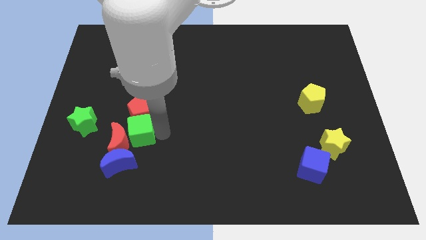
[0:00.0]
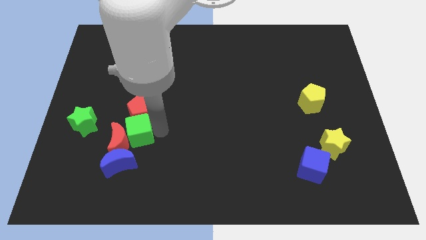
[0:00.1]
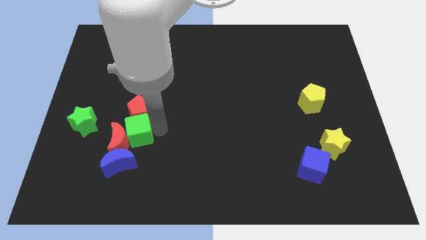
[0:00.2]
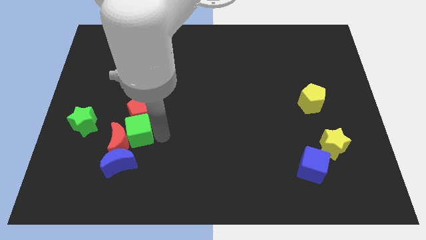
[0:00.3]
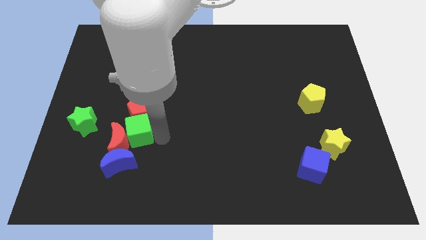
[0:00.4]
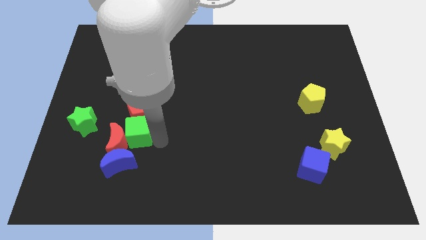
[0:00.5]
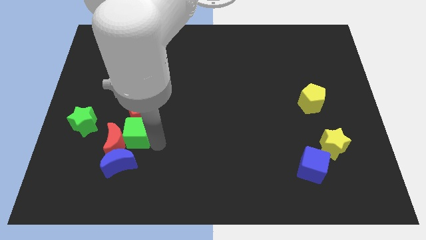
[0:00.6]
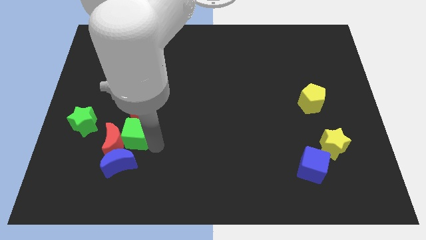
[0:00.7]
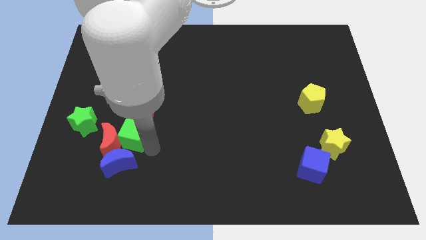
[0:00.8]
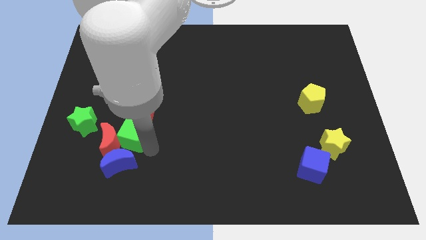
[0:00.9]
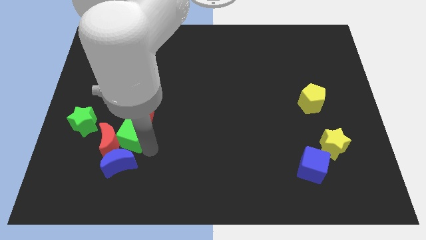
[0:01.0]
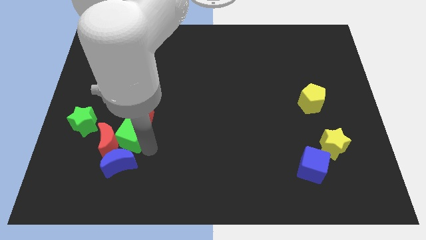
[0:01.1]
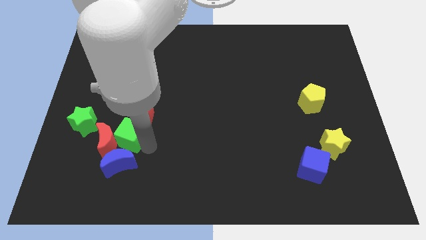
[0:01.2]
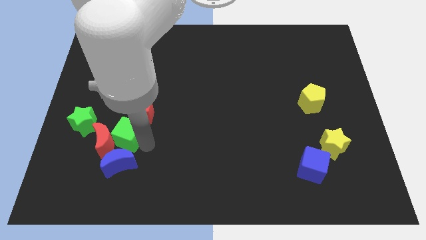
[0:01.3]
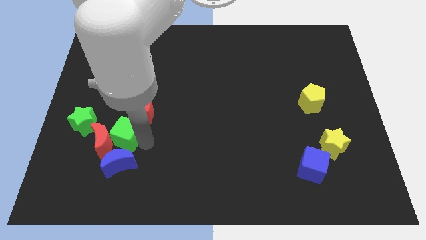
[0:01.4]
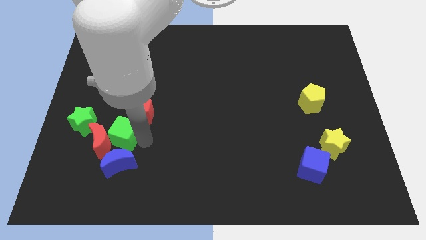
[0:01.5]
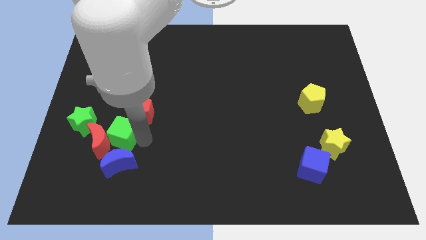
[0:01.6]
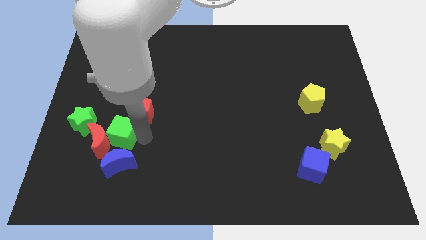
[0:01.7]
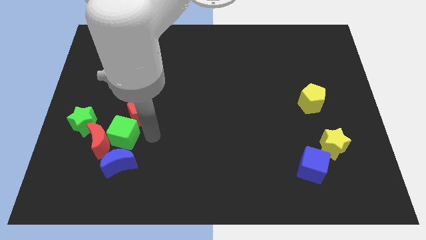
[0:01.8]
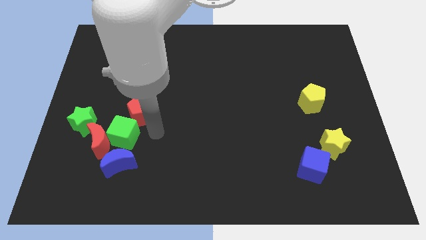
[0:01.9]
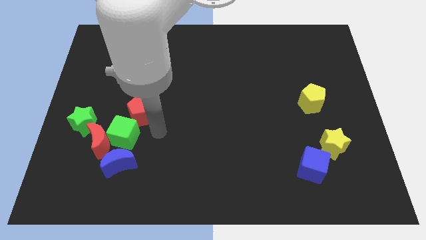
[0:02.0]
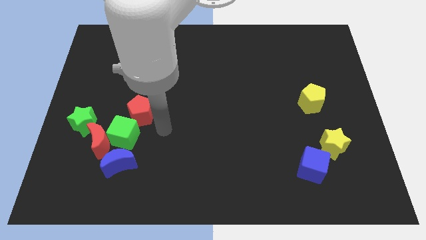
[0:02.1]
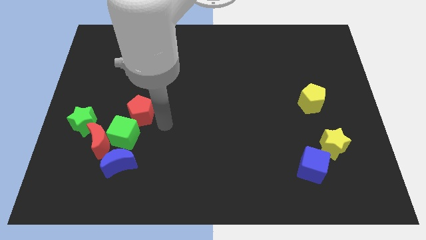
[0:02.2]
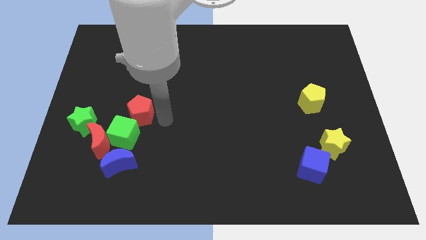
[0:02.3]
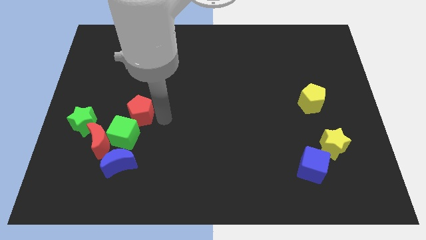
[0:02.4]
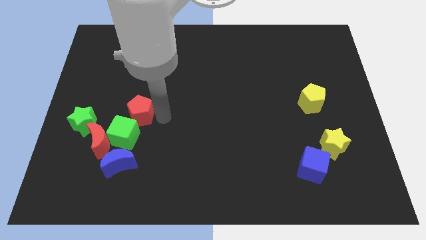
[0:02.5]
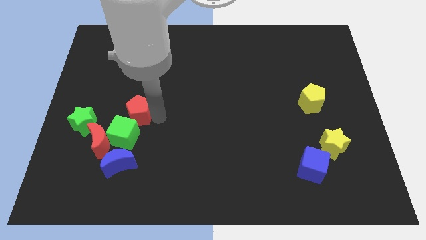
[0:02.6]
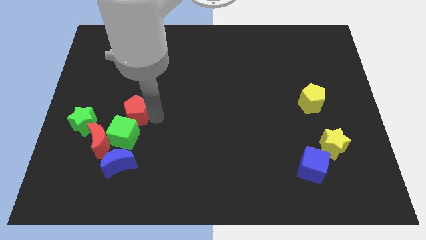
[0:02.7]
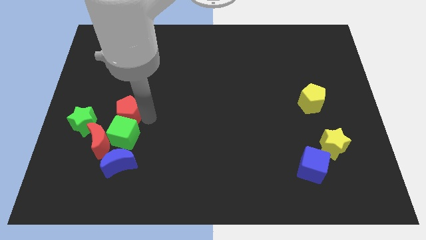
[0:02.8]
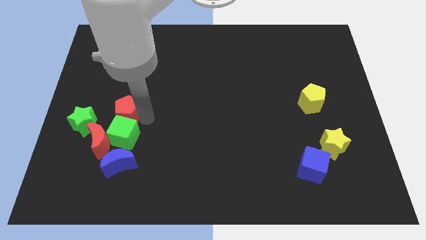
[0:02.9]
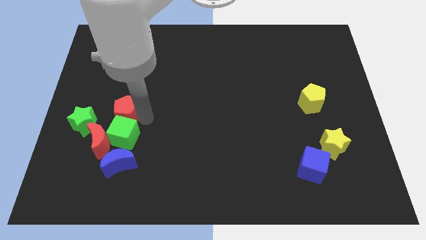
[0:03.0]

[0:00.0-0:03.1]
push green cube red pentagon into the group of blocks

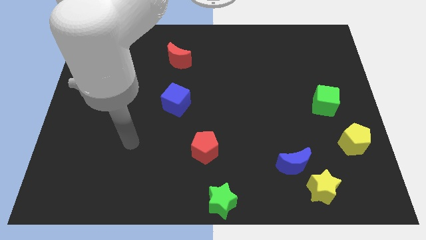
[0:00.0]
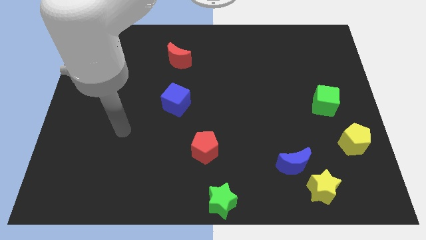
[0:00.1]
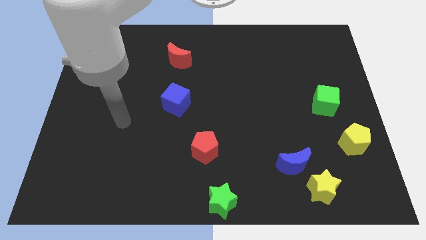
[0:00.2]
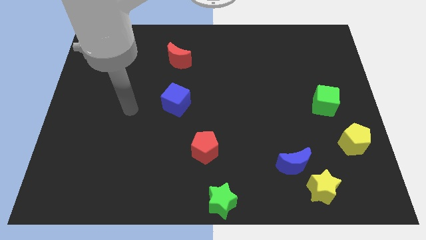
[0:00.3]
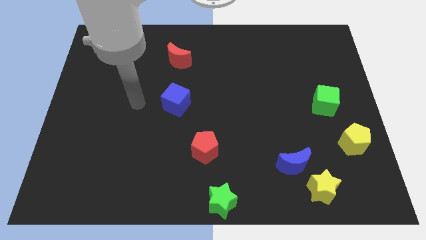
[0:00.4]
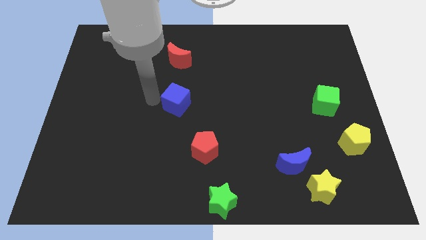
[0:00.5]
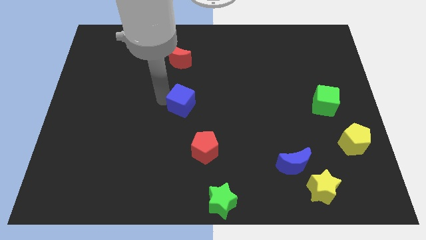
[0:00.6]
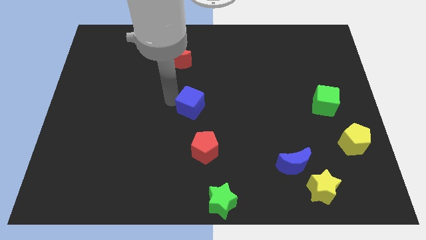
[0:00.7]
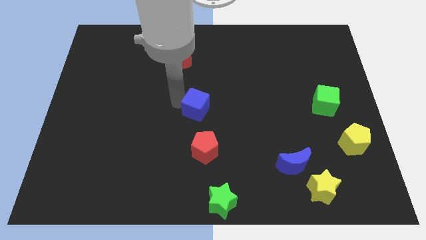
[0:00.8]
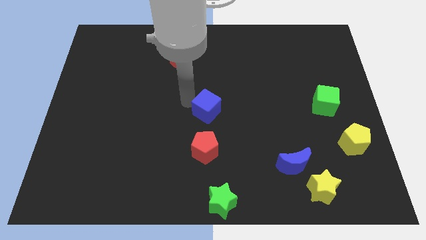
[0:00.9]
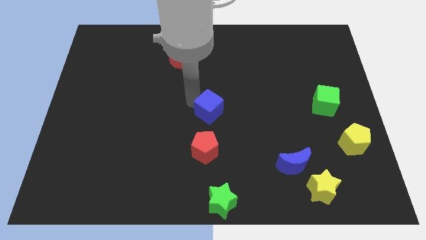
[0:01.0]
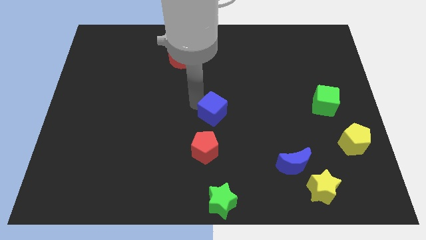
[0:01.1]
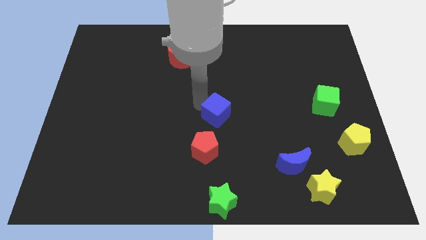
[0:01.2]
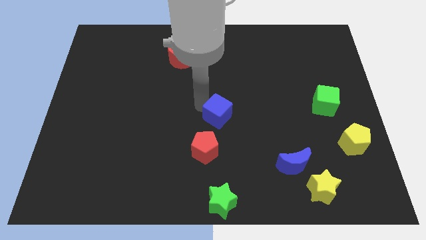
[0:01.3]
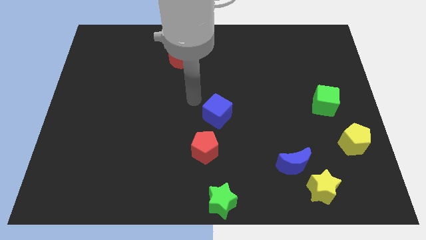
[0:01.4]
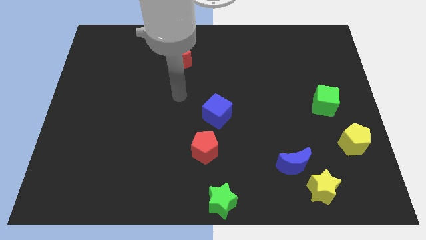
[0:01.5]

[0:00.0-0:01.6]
put the green cube at the top right side of red pentagon

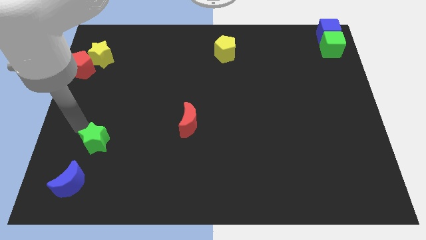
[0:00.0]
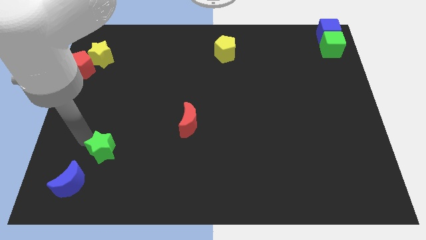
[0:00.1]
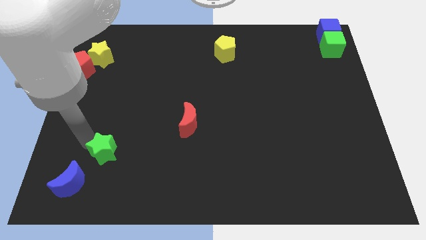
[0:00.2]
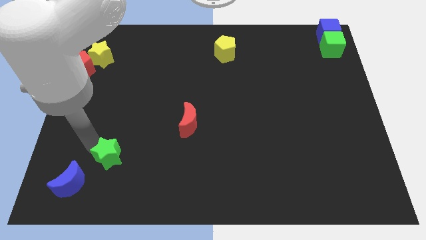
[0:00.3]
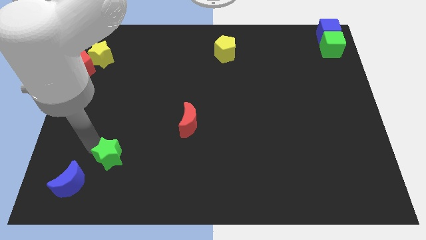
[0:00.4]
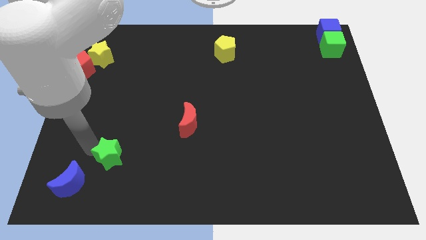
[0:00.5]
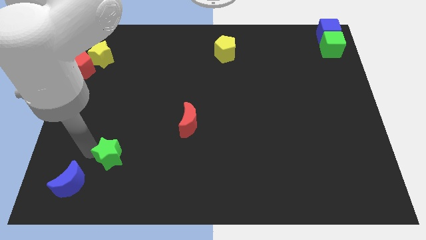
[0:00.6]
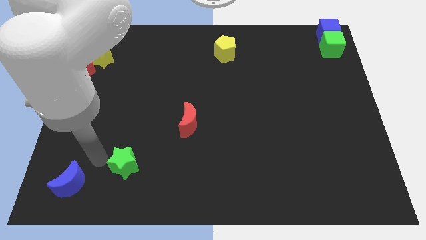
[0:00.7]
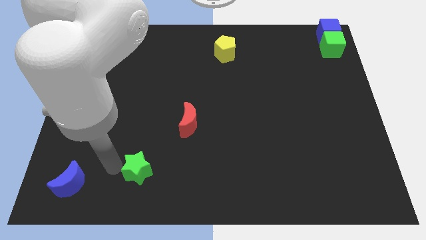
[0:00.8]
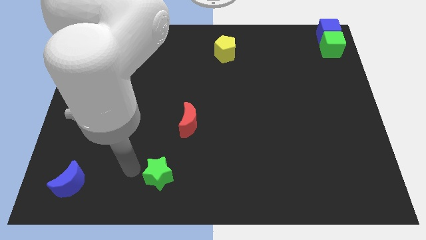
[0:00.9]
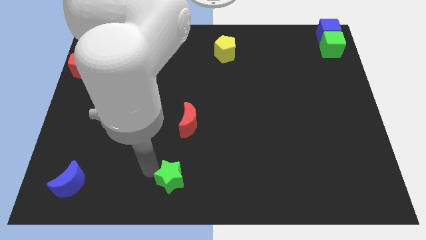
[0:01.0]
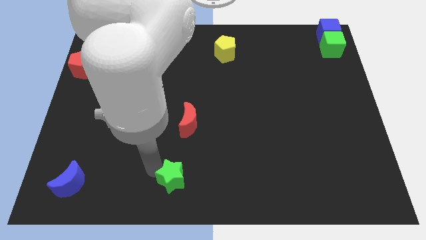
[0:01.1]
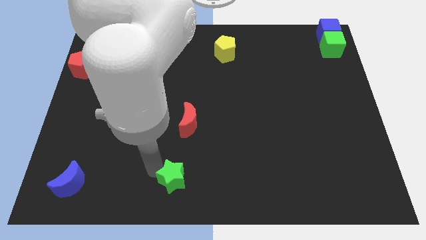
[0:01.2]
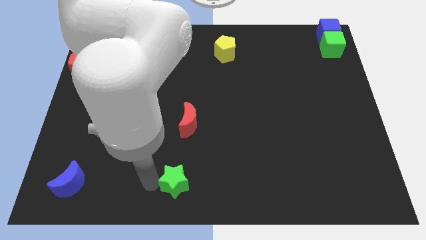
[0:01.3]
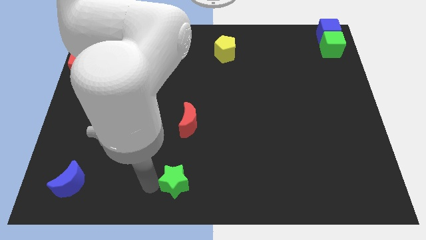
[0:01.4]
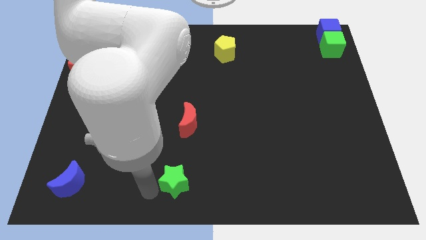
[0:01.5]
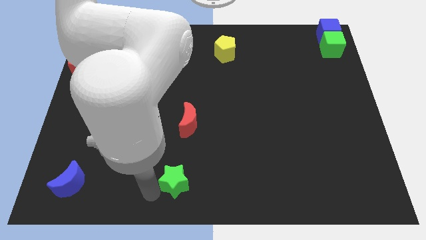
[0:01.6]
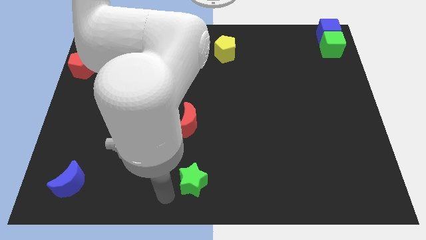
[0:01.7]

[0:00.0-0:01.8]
move the green star towards the bottom center of the board

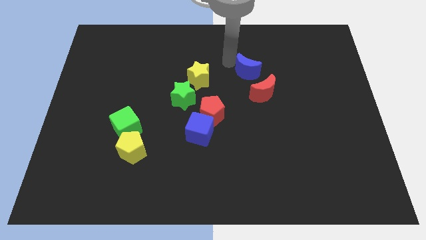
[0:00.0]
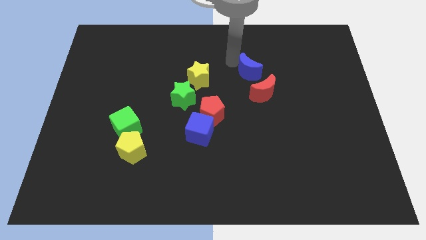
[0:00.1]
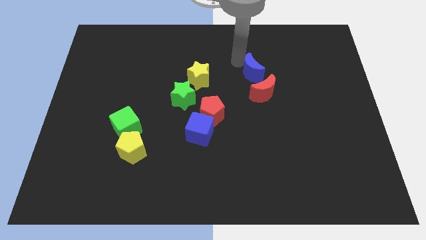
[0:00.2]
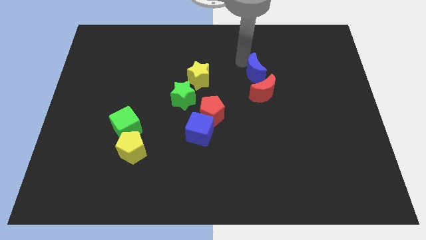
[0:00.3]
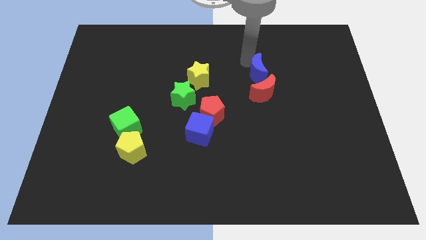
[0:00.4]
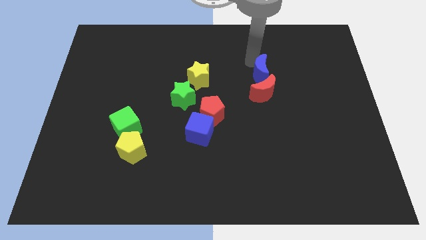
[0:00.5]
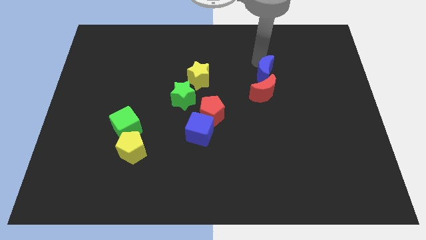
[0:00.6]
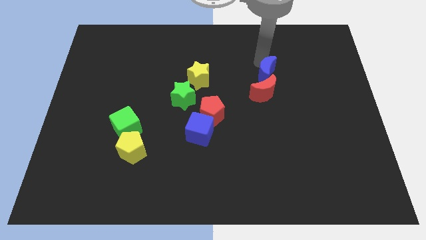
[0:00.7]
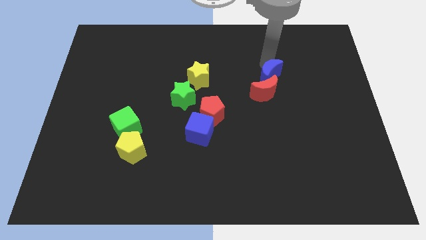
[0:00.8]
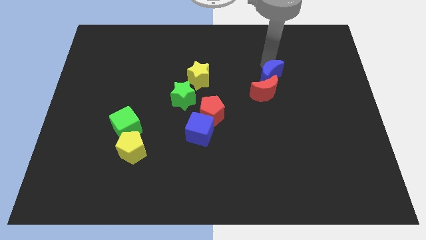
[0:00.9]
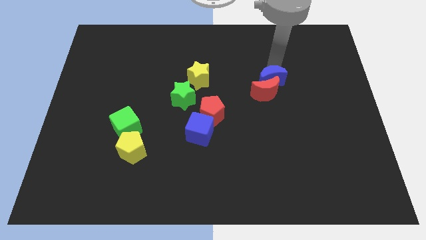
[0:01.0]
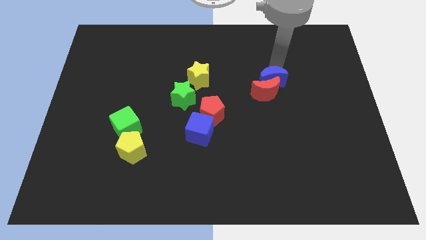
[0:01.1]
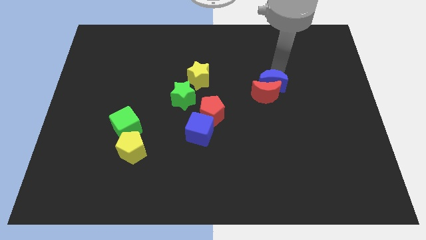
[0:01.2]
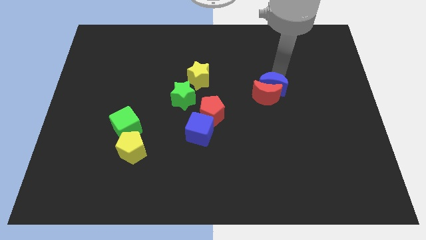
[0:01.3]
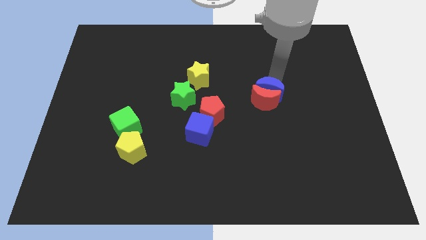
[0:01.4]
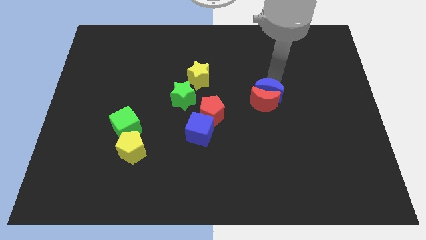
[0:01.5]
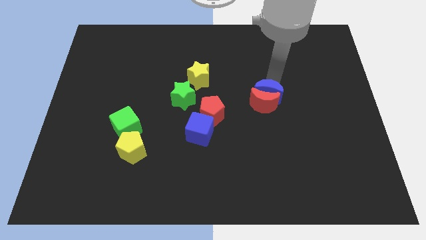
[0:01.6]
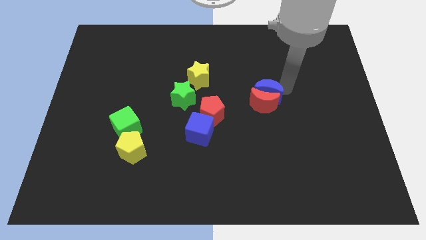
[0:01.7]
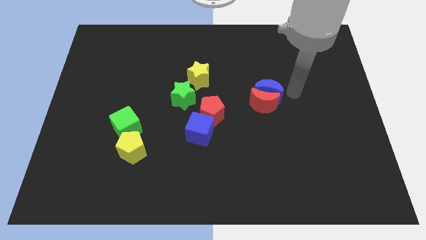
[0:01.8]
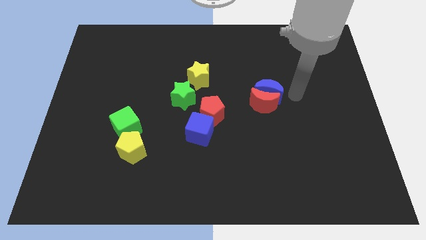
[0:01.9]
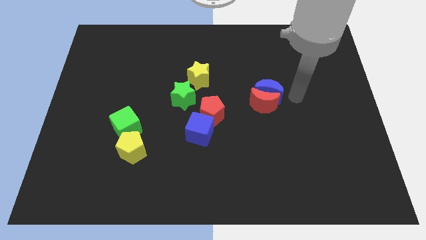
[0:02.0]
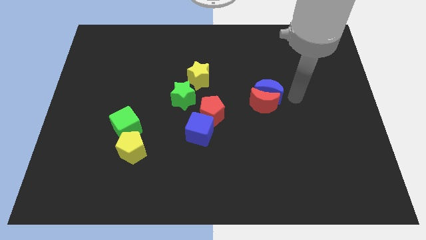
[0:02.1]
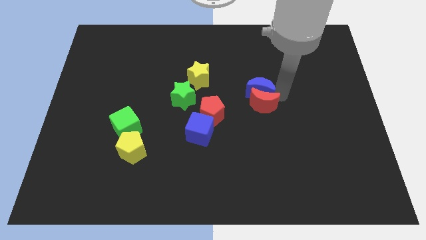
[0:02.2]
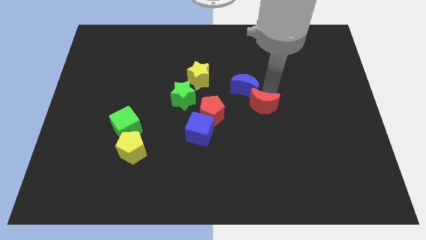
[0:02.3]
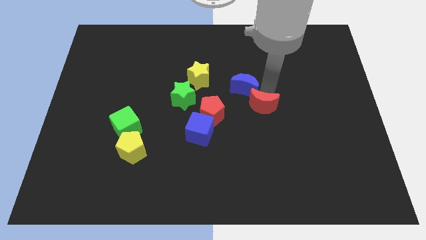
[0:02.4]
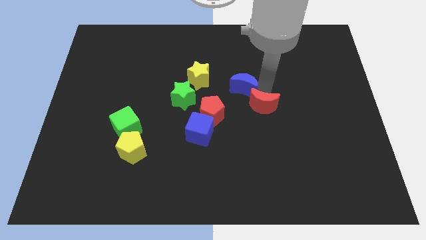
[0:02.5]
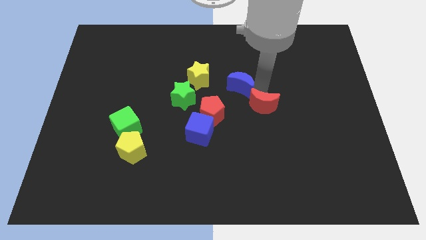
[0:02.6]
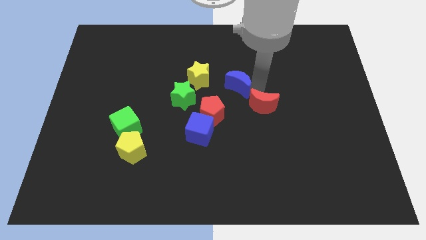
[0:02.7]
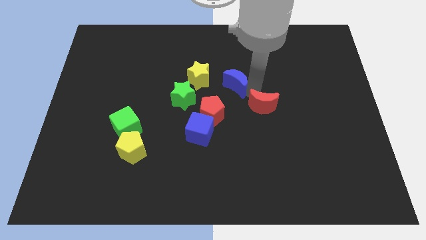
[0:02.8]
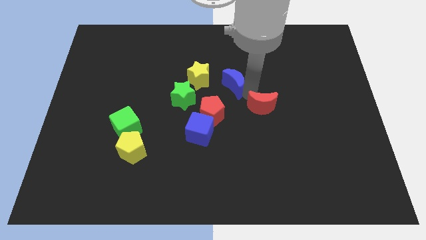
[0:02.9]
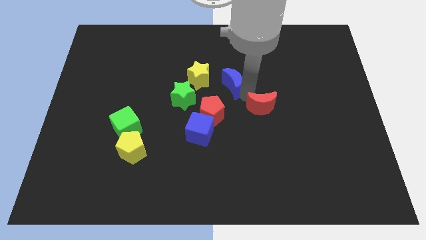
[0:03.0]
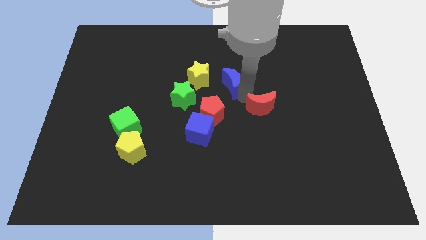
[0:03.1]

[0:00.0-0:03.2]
move the blue crescent to the right of the yellow star
